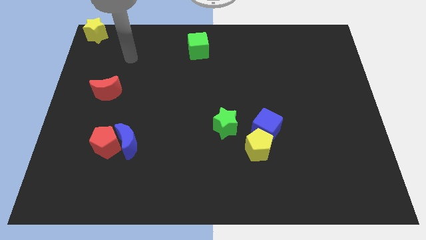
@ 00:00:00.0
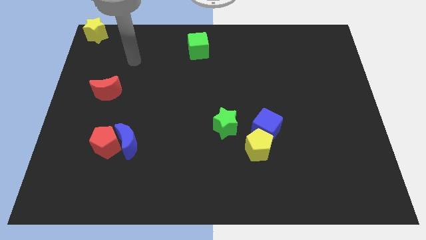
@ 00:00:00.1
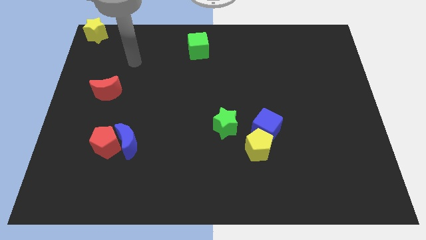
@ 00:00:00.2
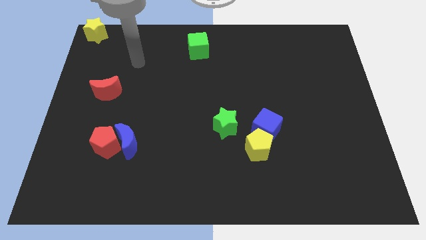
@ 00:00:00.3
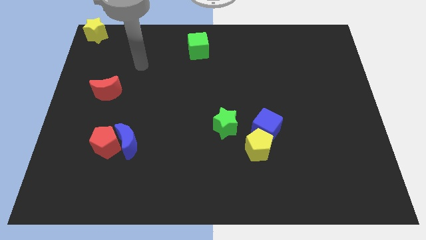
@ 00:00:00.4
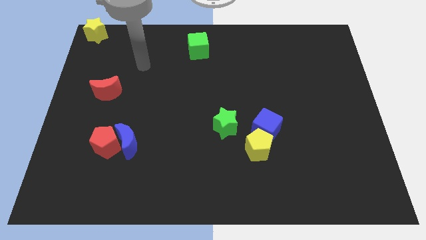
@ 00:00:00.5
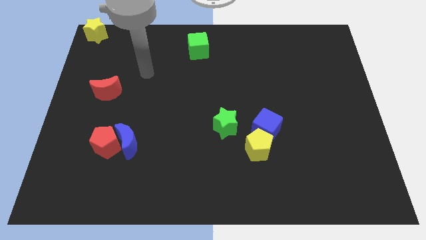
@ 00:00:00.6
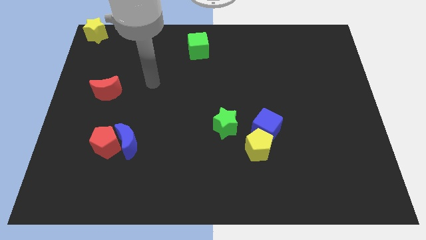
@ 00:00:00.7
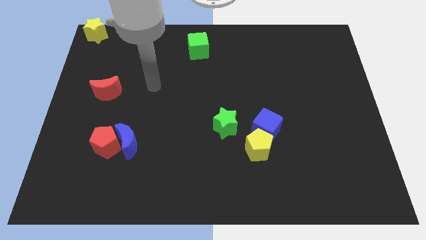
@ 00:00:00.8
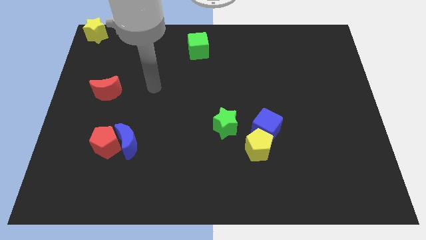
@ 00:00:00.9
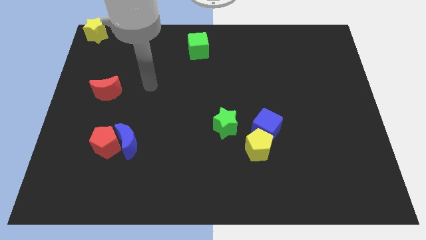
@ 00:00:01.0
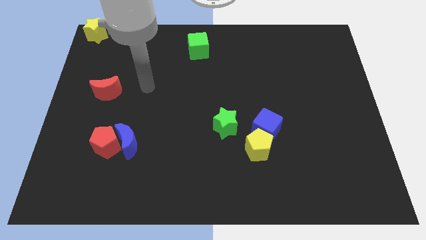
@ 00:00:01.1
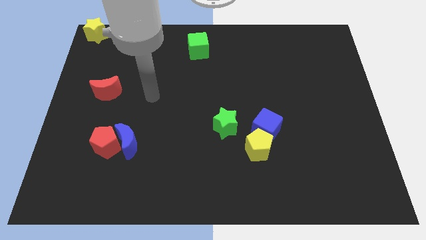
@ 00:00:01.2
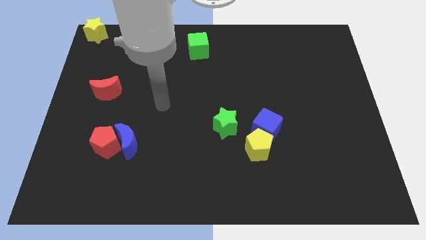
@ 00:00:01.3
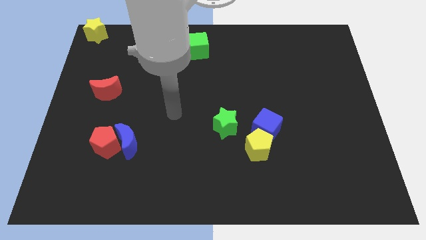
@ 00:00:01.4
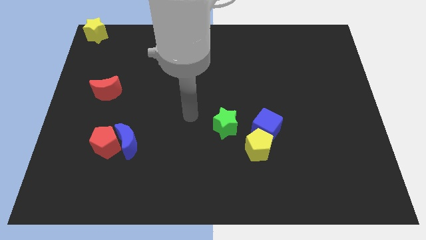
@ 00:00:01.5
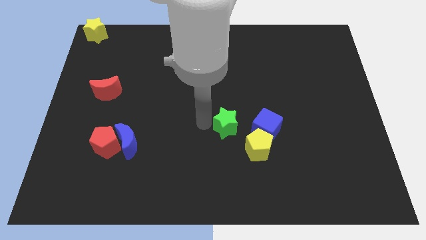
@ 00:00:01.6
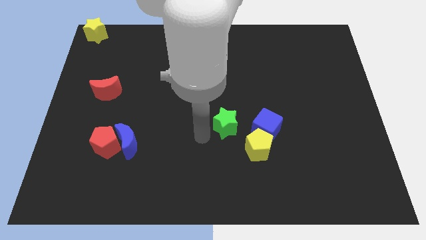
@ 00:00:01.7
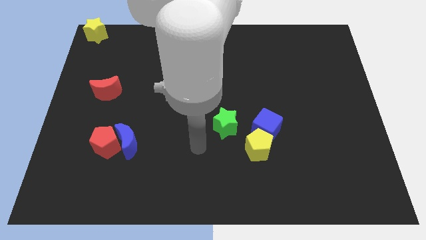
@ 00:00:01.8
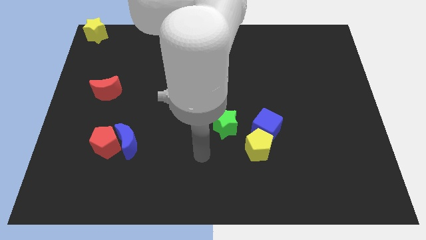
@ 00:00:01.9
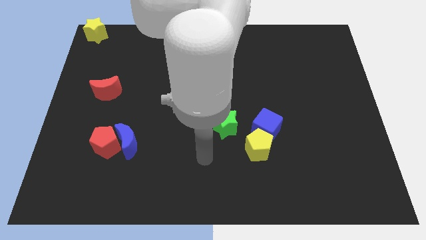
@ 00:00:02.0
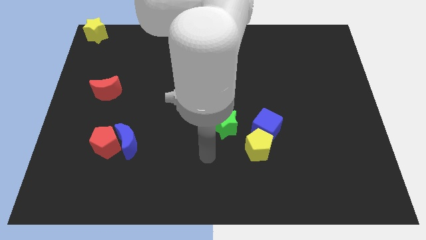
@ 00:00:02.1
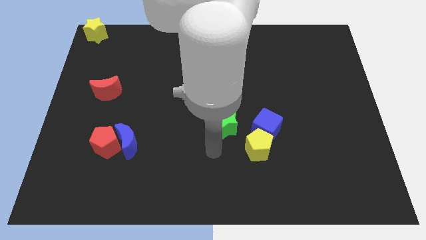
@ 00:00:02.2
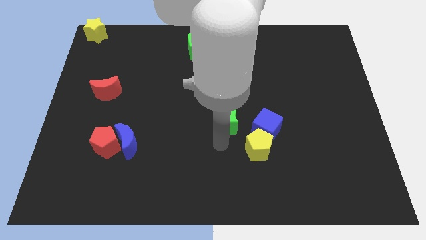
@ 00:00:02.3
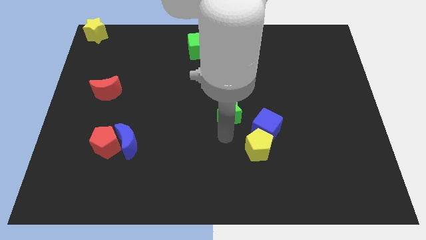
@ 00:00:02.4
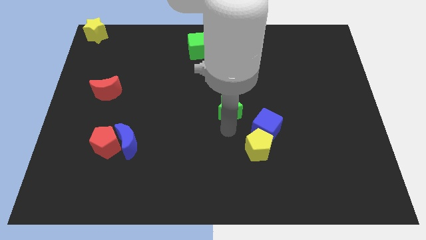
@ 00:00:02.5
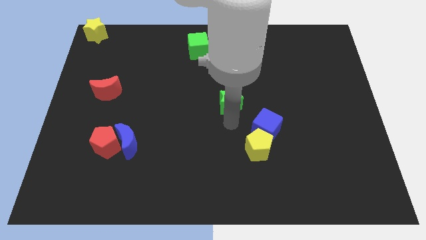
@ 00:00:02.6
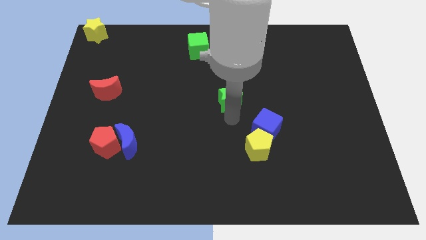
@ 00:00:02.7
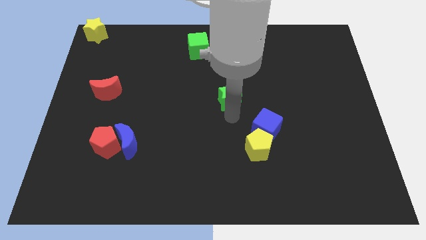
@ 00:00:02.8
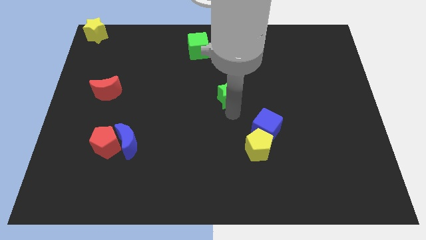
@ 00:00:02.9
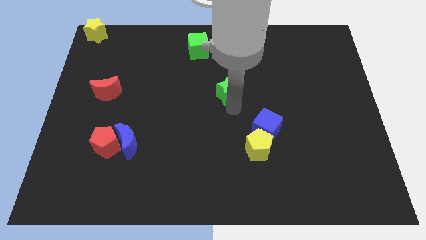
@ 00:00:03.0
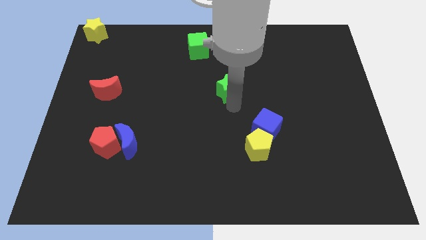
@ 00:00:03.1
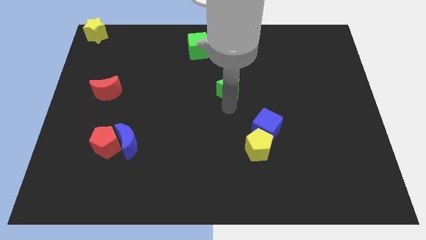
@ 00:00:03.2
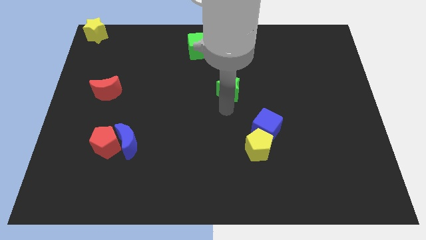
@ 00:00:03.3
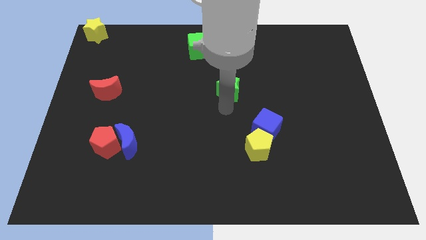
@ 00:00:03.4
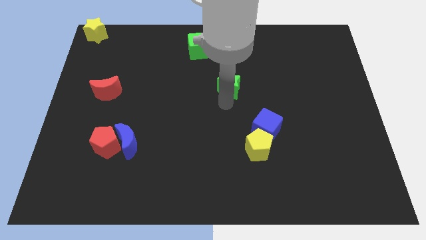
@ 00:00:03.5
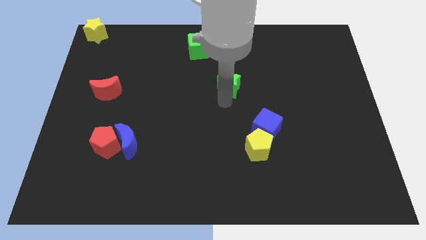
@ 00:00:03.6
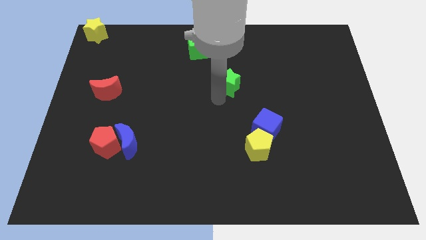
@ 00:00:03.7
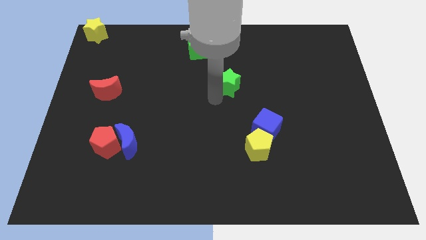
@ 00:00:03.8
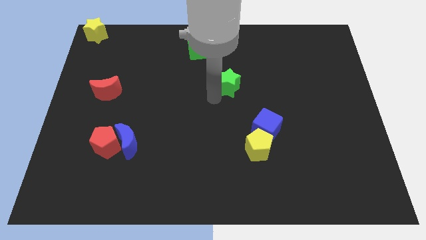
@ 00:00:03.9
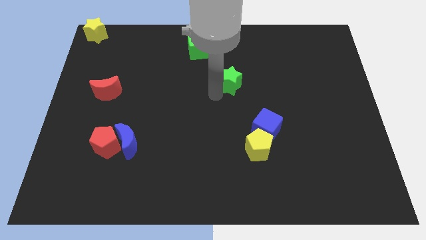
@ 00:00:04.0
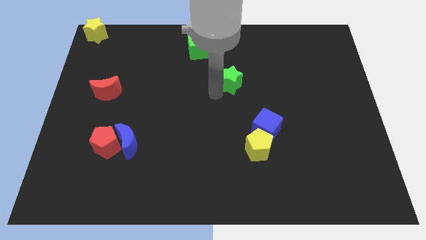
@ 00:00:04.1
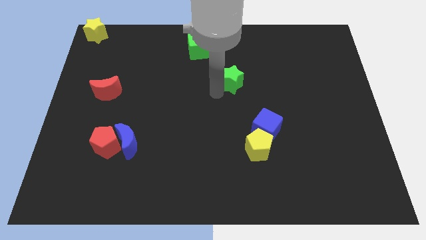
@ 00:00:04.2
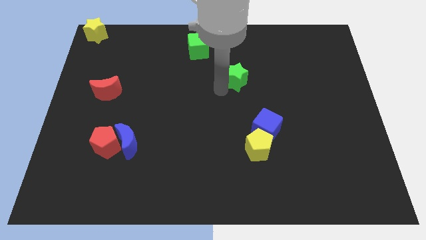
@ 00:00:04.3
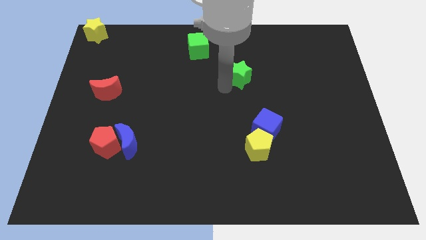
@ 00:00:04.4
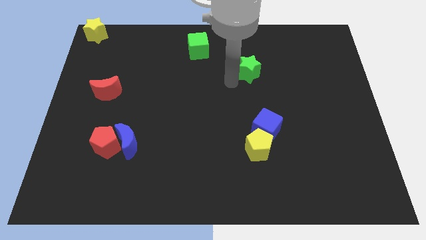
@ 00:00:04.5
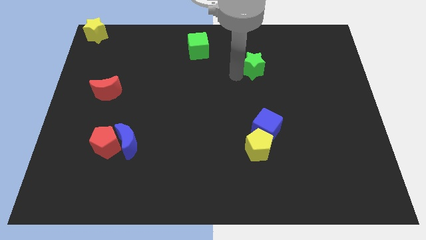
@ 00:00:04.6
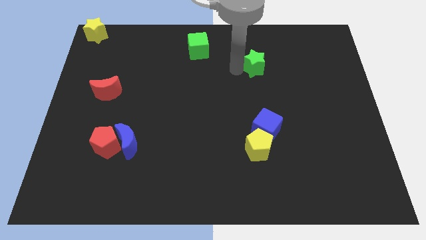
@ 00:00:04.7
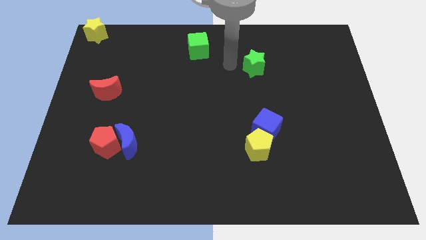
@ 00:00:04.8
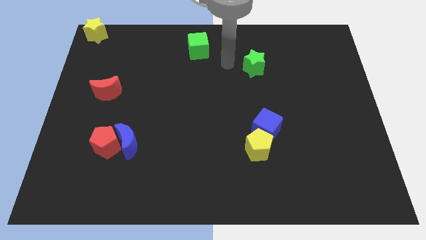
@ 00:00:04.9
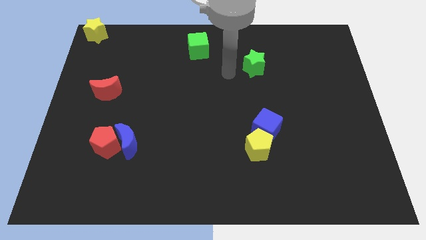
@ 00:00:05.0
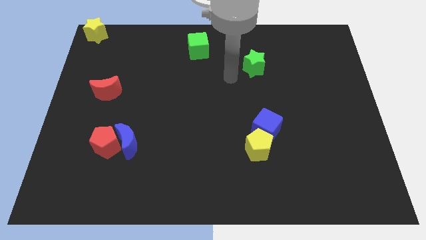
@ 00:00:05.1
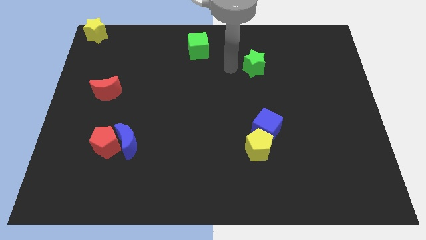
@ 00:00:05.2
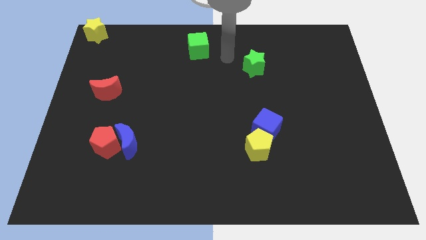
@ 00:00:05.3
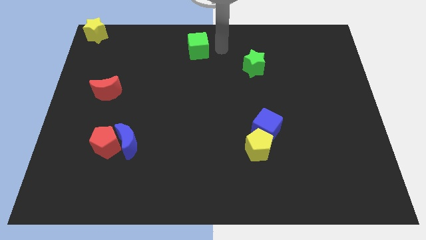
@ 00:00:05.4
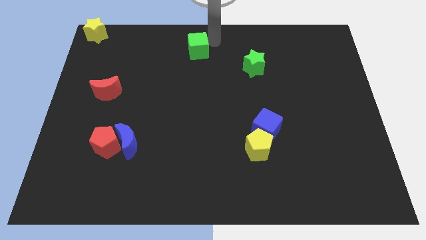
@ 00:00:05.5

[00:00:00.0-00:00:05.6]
place the green star above the blue cube

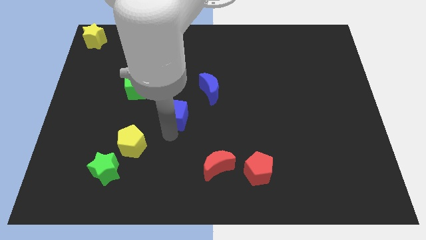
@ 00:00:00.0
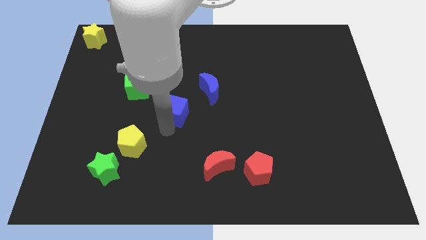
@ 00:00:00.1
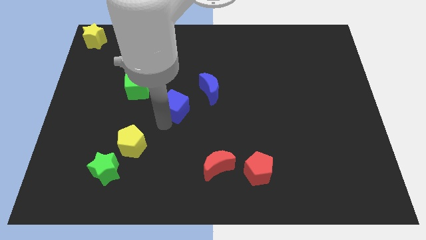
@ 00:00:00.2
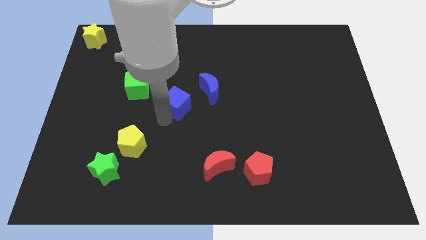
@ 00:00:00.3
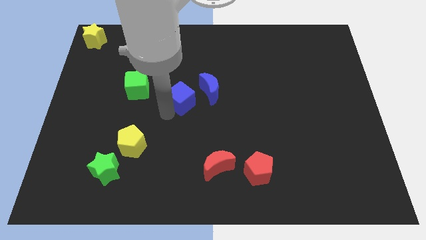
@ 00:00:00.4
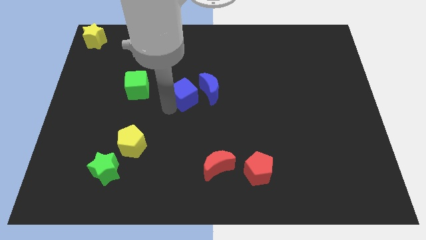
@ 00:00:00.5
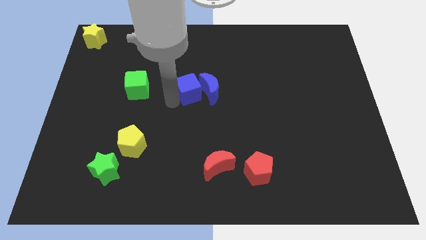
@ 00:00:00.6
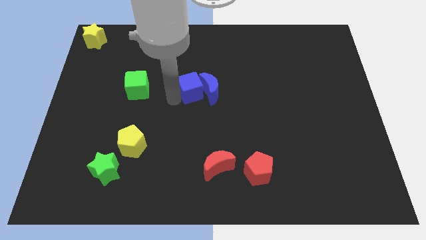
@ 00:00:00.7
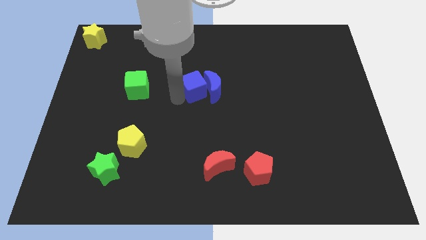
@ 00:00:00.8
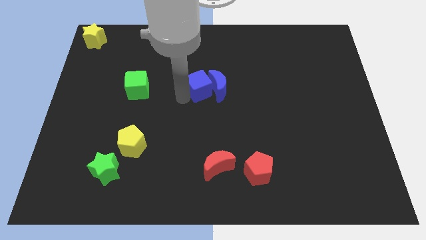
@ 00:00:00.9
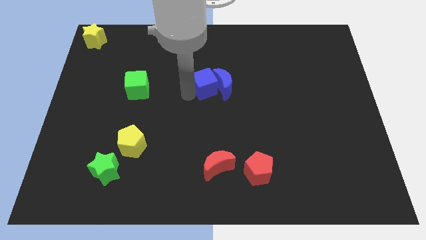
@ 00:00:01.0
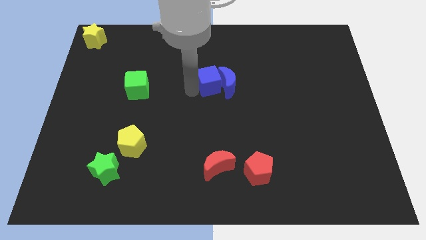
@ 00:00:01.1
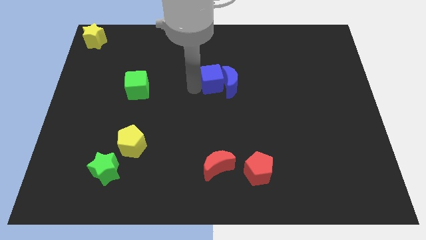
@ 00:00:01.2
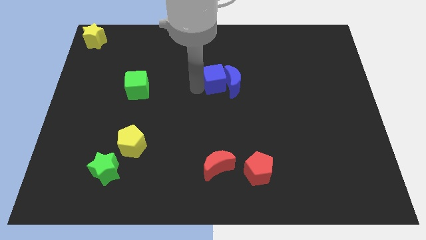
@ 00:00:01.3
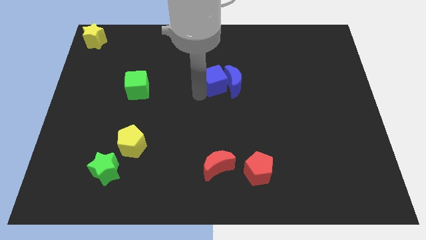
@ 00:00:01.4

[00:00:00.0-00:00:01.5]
push the blue cube into the blue moon

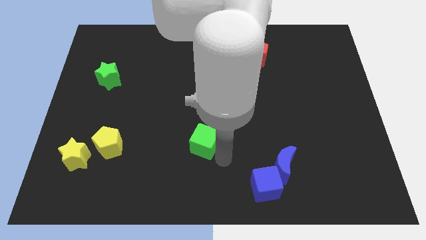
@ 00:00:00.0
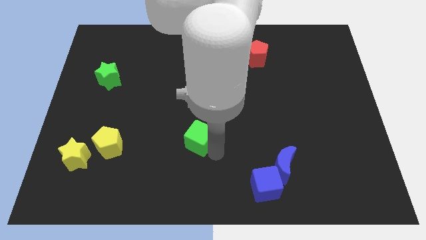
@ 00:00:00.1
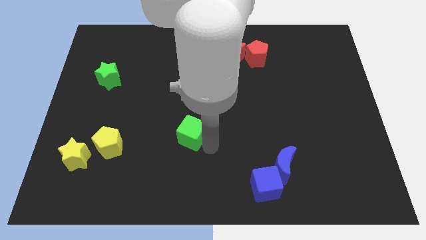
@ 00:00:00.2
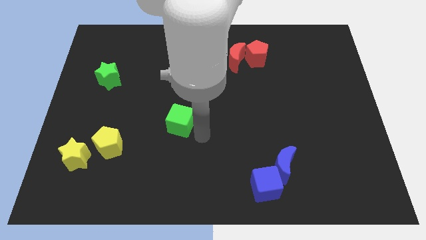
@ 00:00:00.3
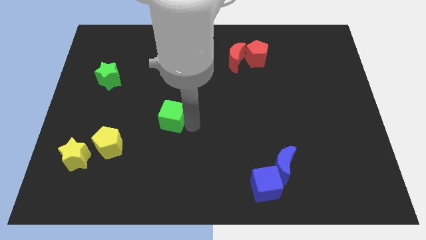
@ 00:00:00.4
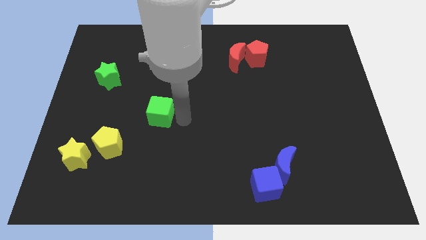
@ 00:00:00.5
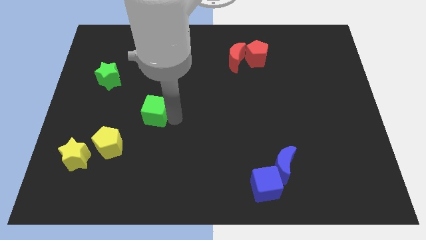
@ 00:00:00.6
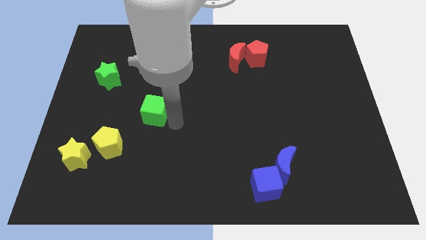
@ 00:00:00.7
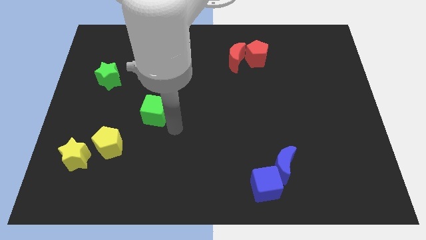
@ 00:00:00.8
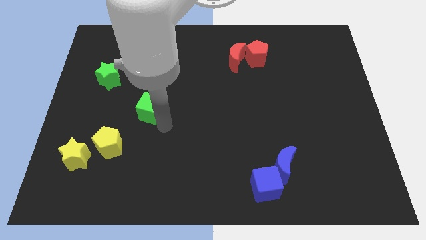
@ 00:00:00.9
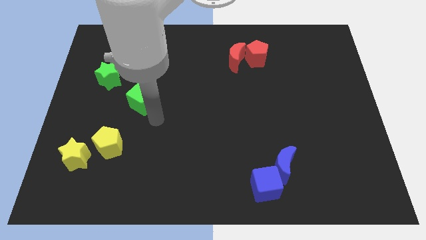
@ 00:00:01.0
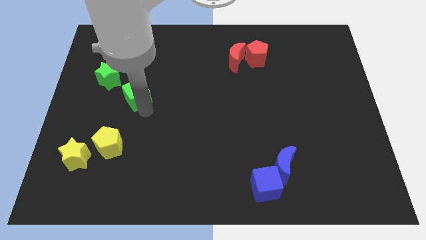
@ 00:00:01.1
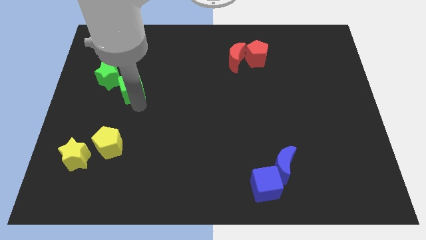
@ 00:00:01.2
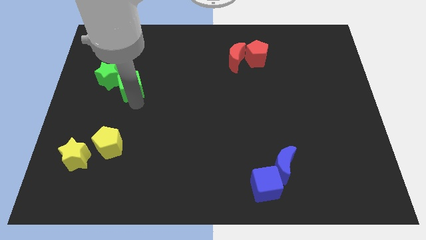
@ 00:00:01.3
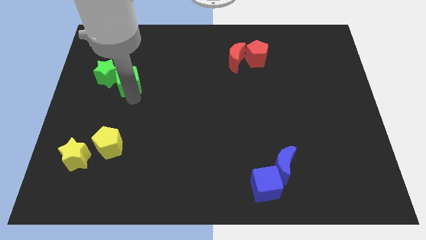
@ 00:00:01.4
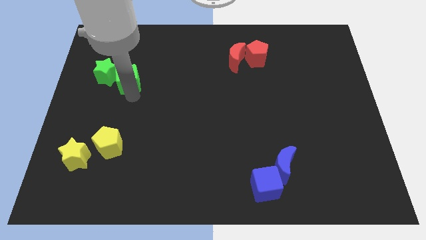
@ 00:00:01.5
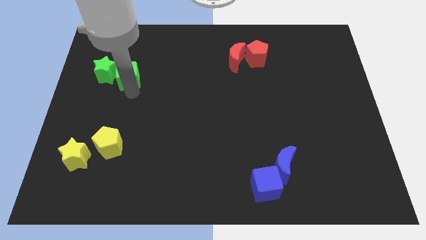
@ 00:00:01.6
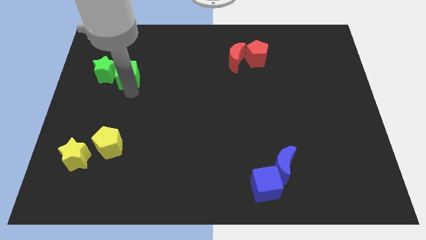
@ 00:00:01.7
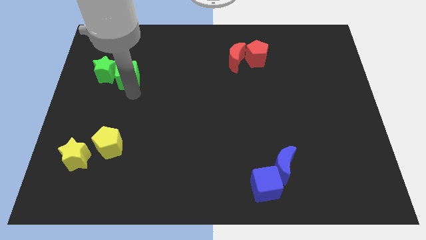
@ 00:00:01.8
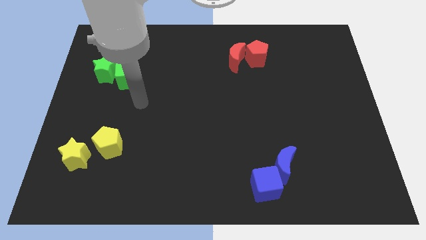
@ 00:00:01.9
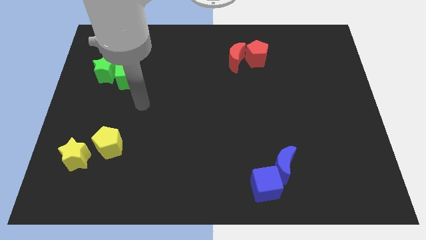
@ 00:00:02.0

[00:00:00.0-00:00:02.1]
move the green cube into the green star
